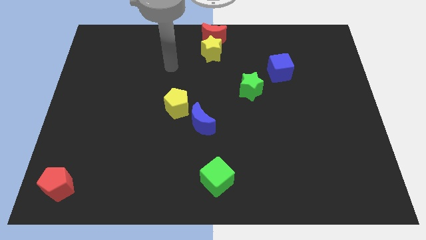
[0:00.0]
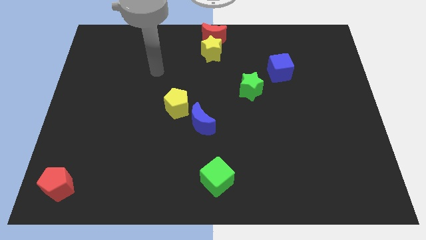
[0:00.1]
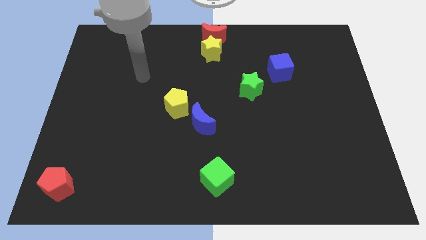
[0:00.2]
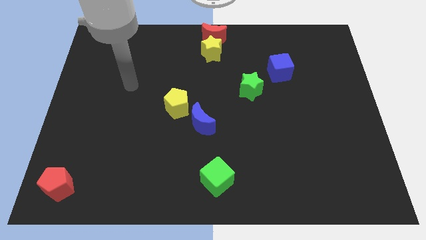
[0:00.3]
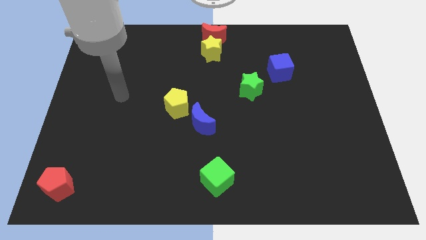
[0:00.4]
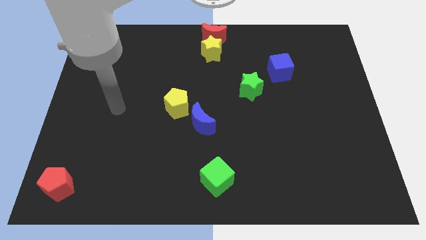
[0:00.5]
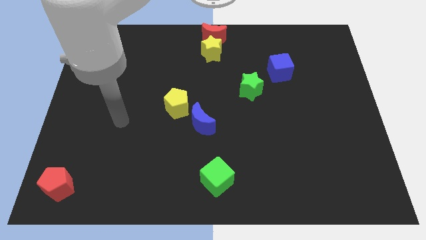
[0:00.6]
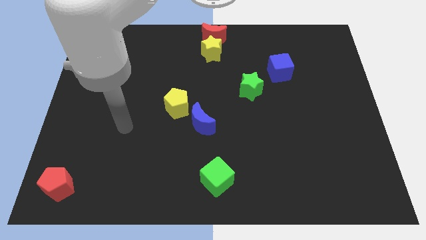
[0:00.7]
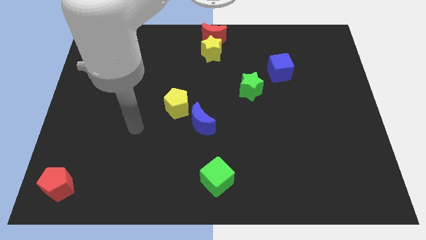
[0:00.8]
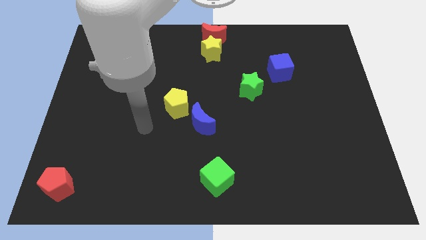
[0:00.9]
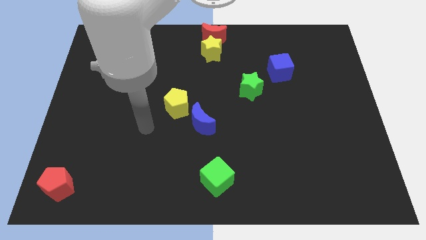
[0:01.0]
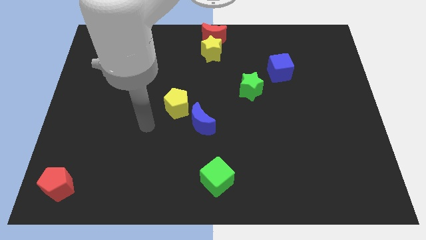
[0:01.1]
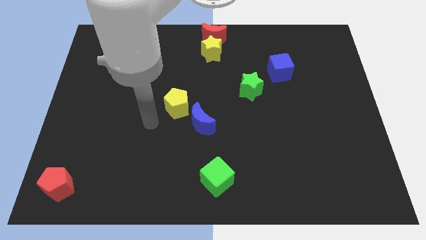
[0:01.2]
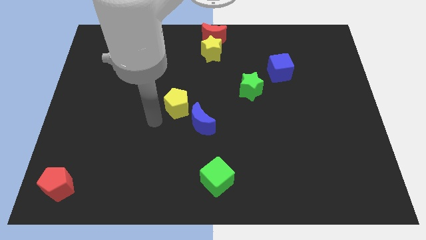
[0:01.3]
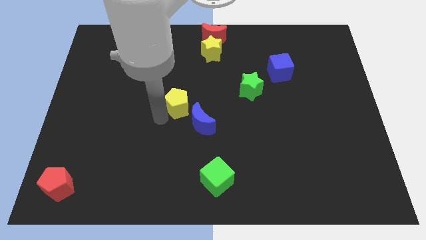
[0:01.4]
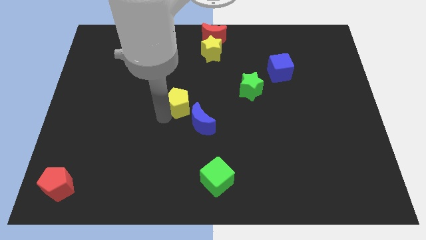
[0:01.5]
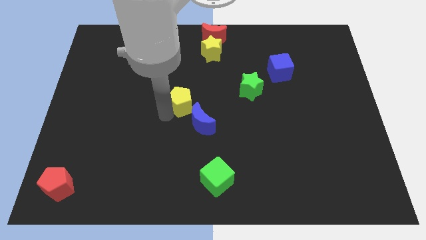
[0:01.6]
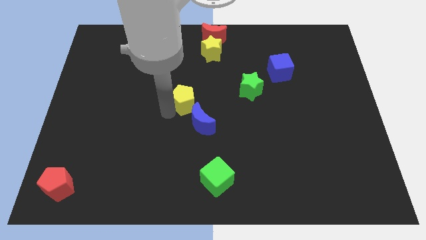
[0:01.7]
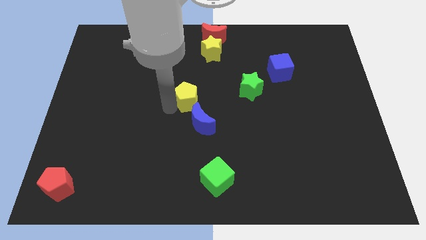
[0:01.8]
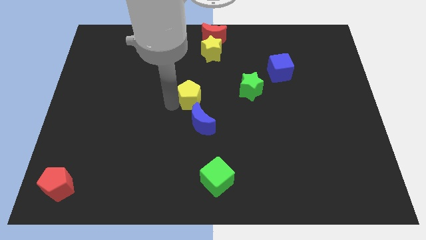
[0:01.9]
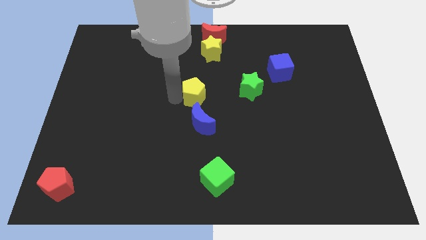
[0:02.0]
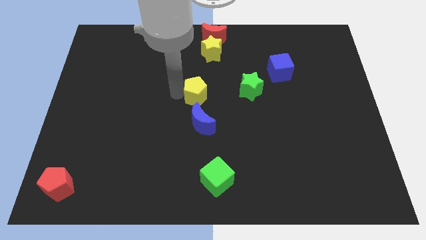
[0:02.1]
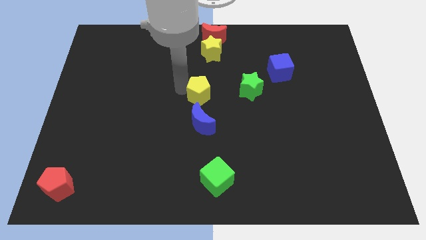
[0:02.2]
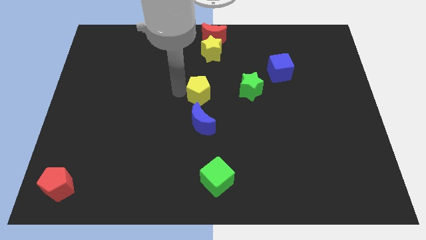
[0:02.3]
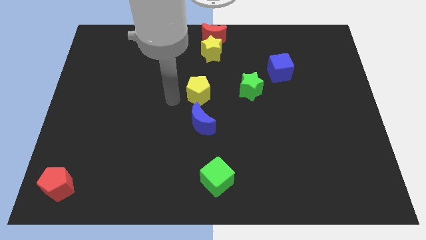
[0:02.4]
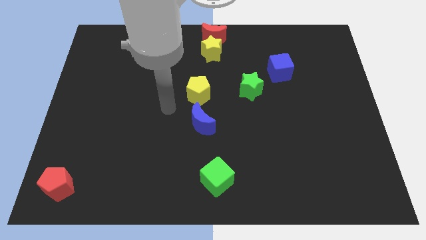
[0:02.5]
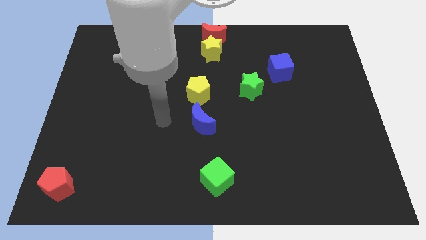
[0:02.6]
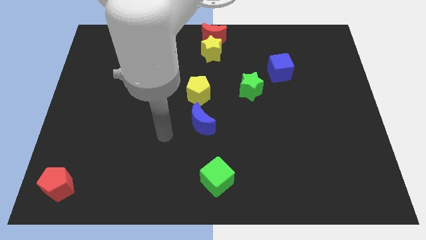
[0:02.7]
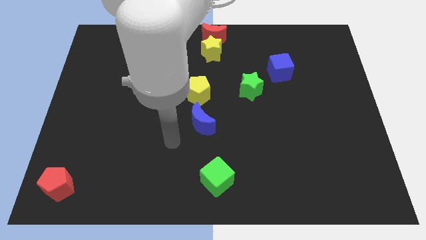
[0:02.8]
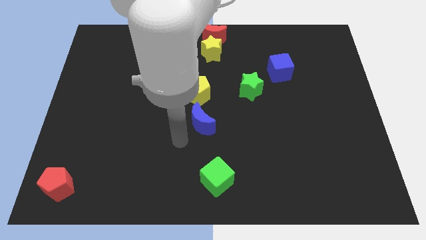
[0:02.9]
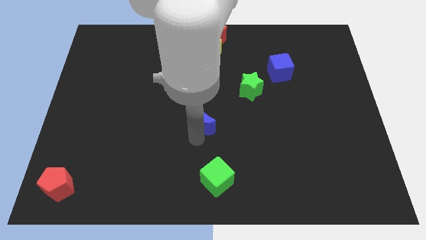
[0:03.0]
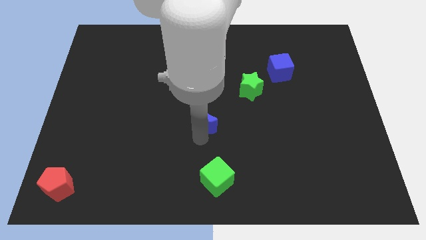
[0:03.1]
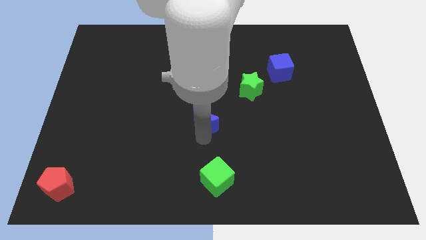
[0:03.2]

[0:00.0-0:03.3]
push the yellow pentagon on the top of the blue moon

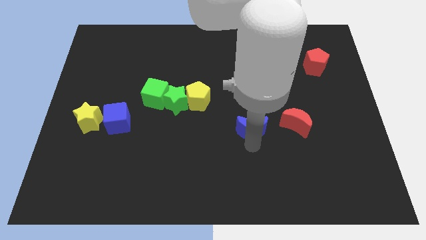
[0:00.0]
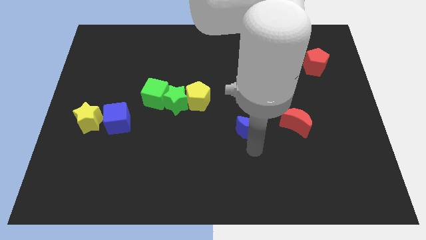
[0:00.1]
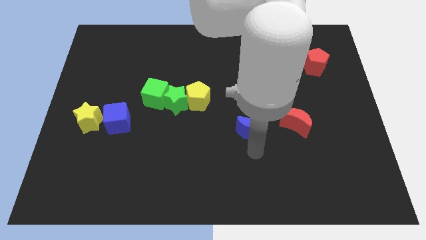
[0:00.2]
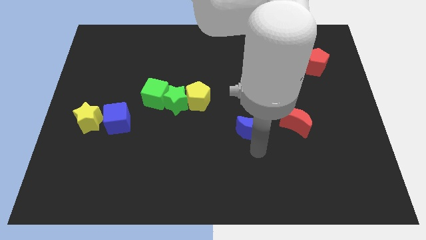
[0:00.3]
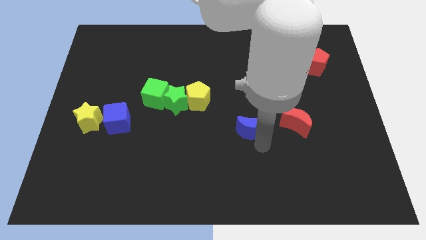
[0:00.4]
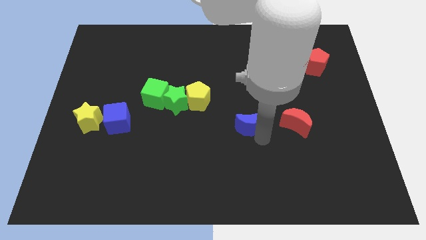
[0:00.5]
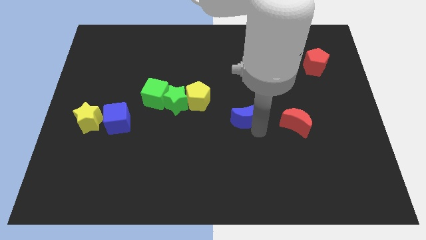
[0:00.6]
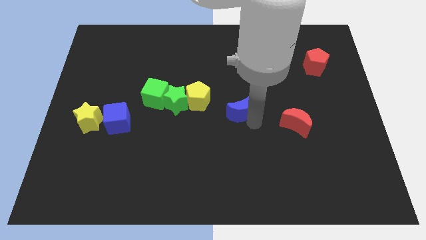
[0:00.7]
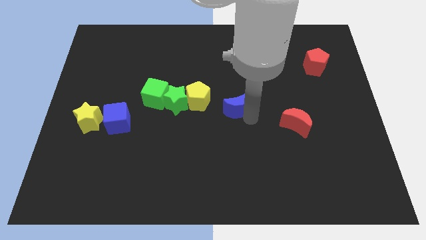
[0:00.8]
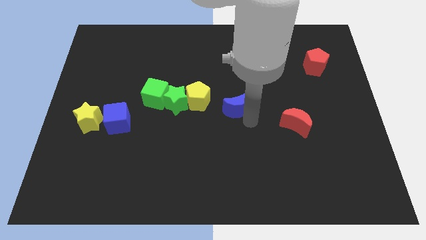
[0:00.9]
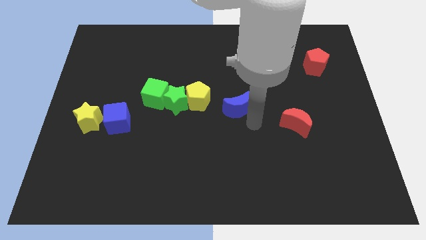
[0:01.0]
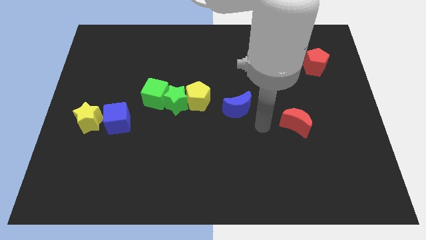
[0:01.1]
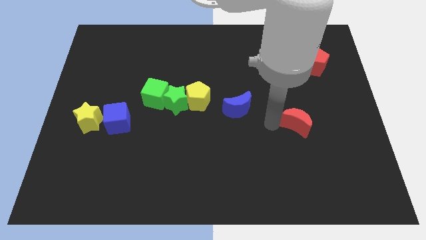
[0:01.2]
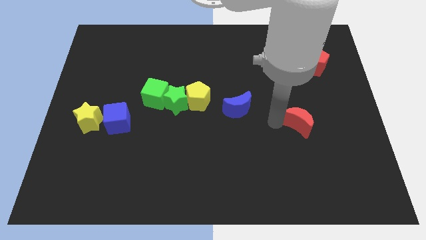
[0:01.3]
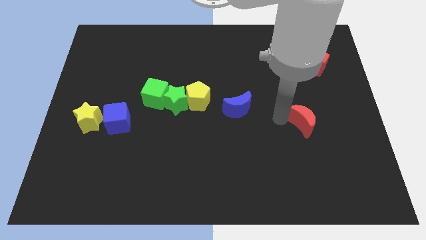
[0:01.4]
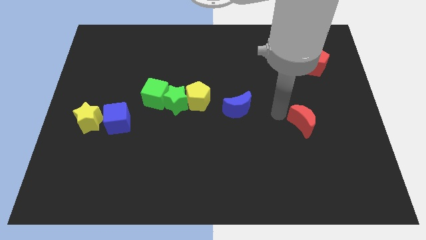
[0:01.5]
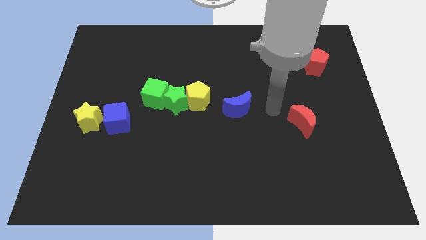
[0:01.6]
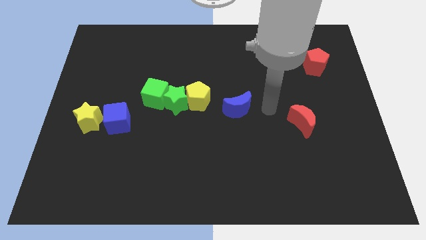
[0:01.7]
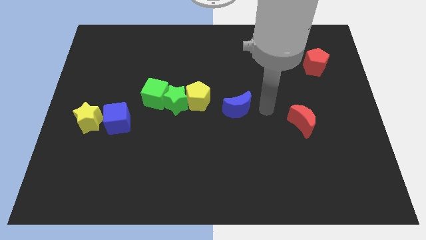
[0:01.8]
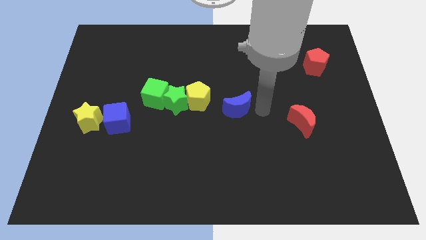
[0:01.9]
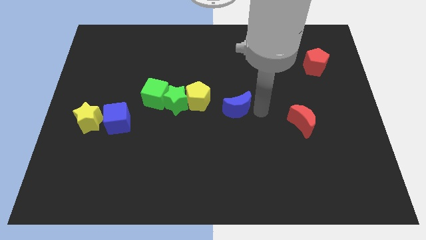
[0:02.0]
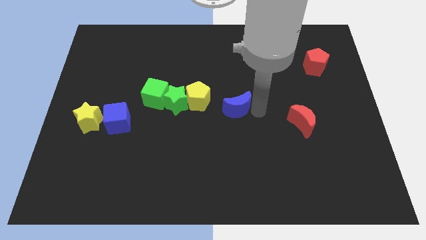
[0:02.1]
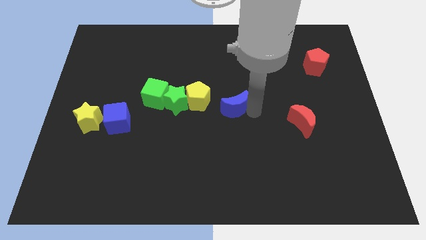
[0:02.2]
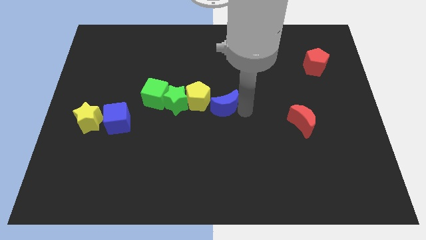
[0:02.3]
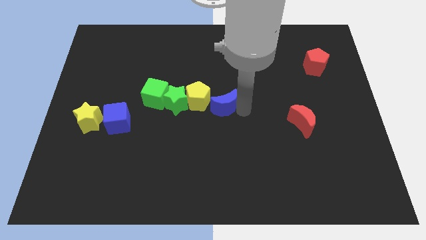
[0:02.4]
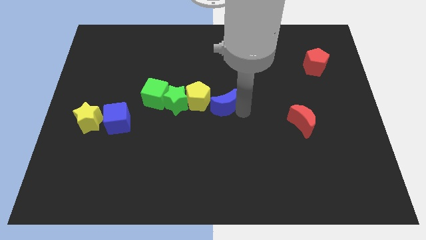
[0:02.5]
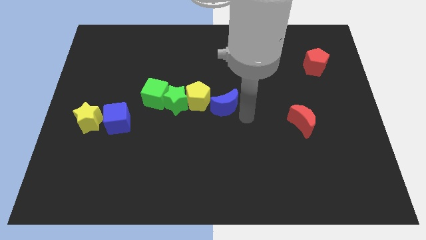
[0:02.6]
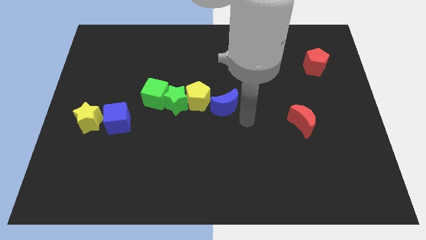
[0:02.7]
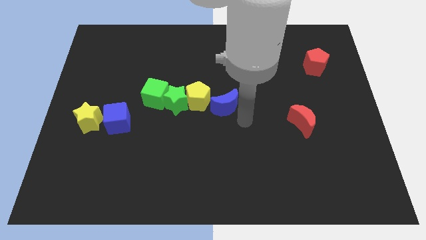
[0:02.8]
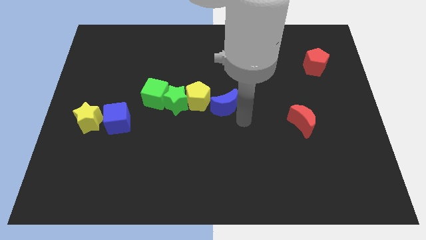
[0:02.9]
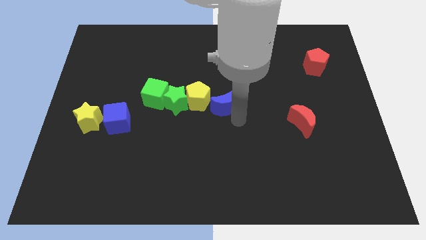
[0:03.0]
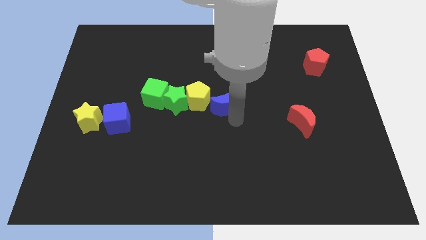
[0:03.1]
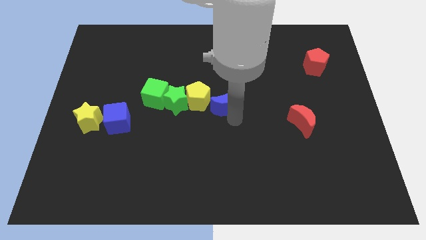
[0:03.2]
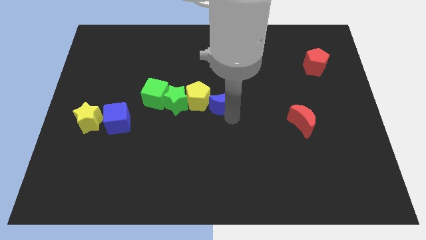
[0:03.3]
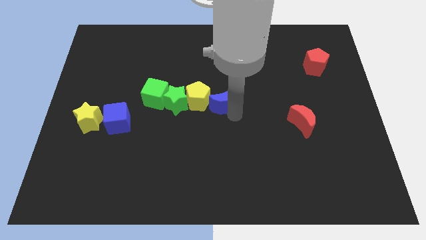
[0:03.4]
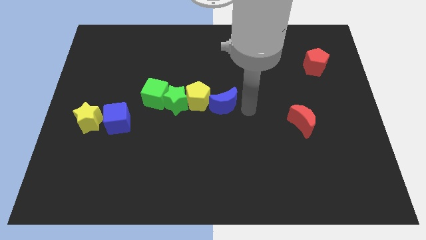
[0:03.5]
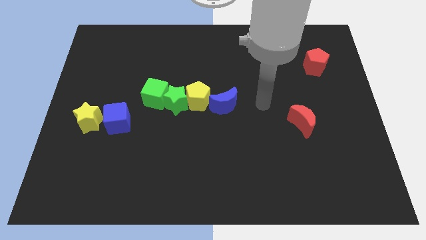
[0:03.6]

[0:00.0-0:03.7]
place blue crescent beside yellow pentagon

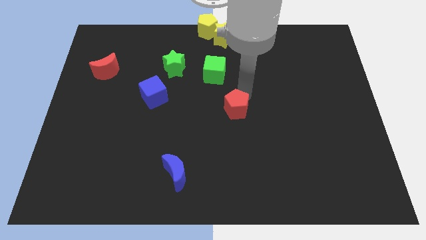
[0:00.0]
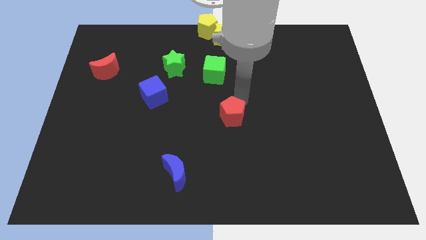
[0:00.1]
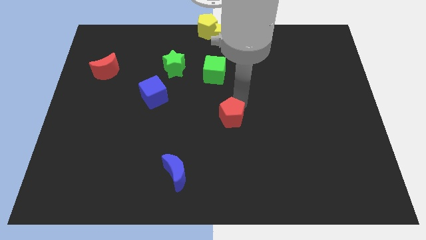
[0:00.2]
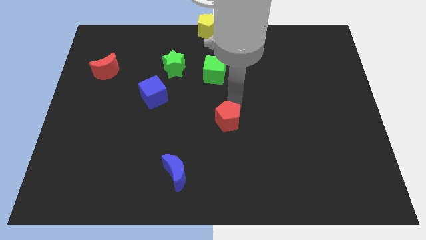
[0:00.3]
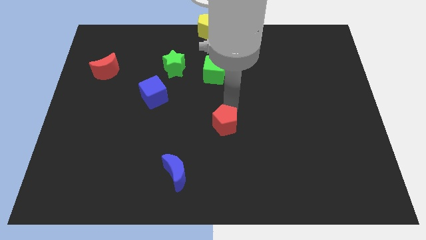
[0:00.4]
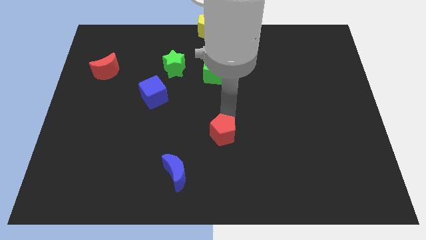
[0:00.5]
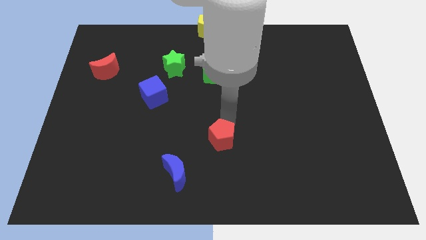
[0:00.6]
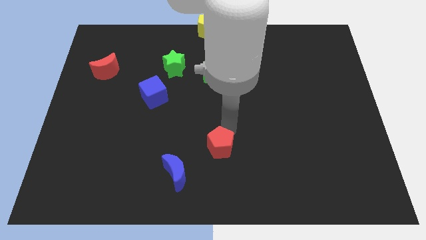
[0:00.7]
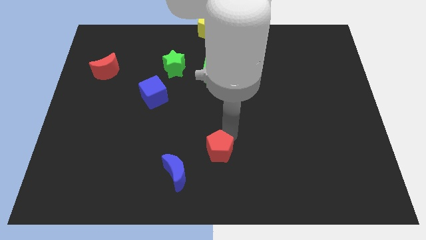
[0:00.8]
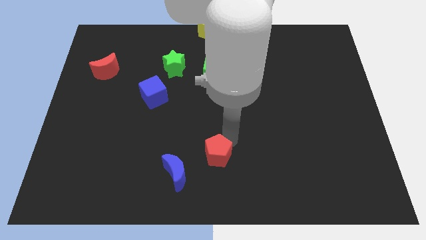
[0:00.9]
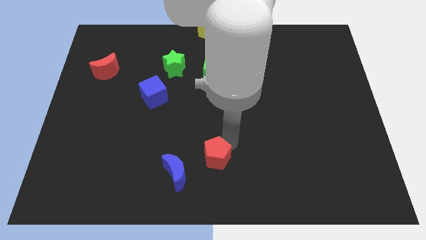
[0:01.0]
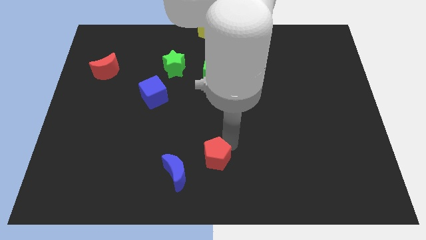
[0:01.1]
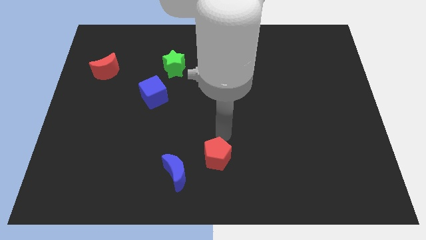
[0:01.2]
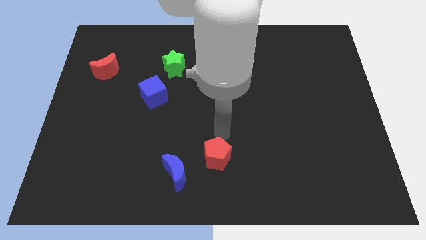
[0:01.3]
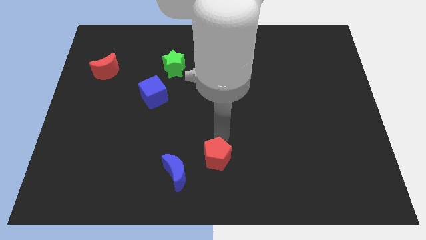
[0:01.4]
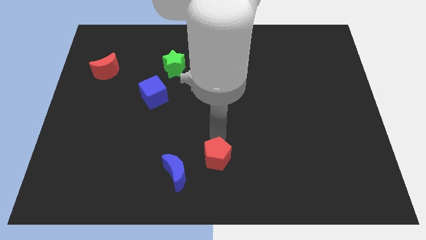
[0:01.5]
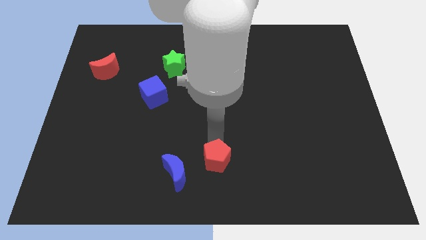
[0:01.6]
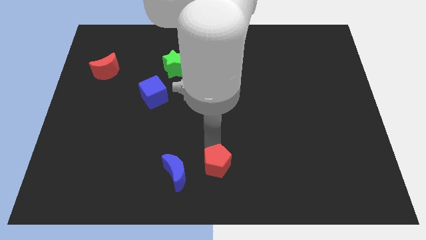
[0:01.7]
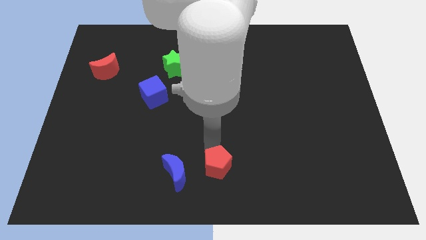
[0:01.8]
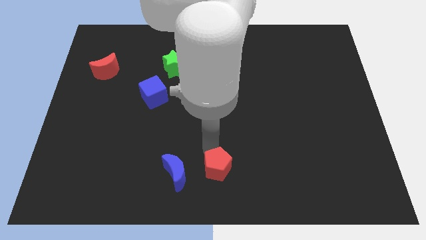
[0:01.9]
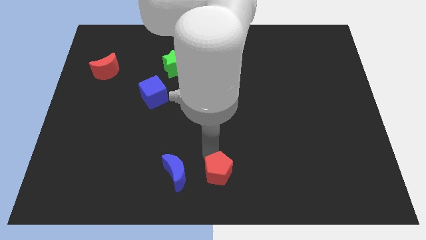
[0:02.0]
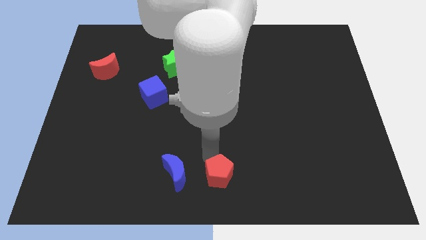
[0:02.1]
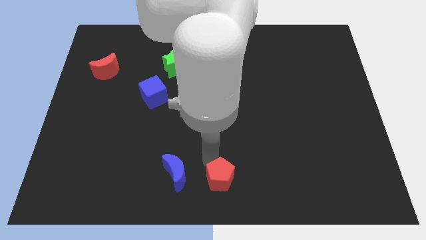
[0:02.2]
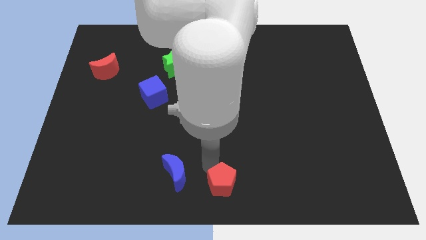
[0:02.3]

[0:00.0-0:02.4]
push the red pentagon to the right of the blue moon
